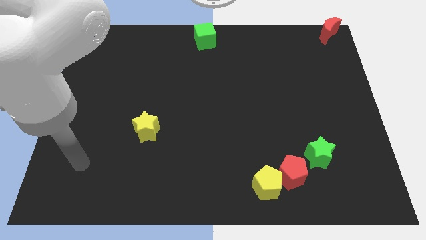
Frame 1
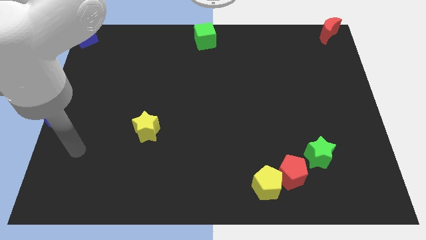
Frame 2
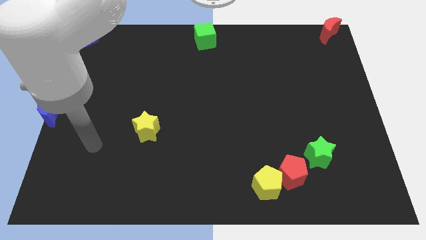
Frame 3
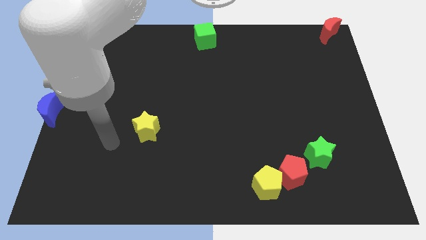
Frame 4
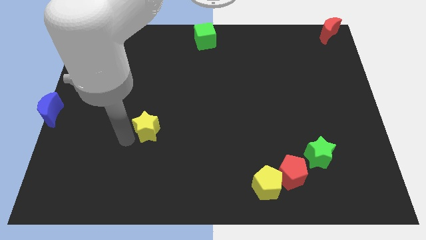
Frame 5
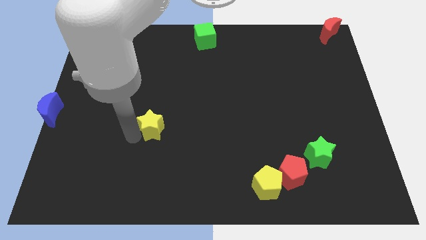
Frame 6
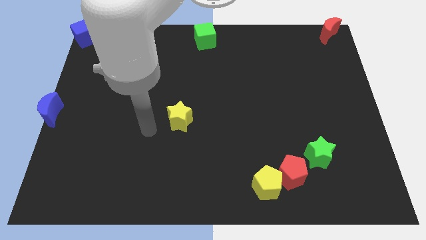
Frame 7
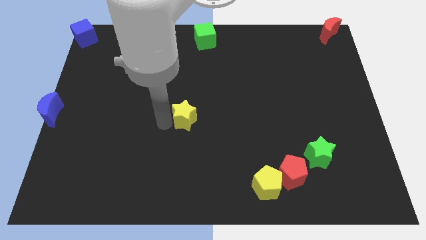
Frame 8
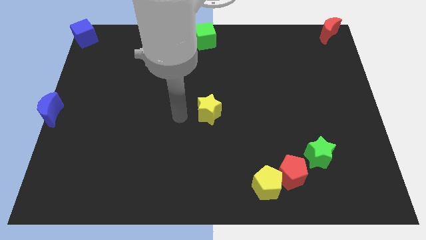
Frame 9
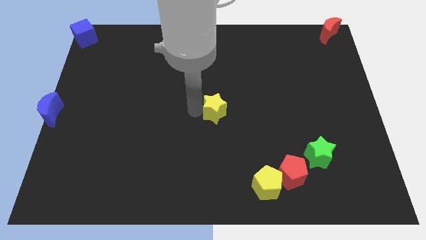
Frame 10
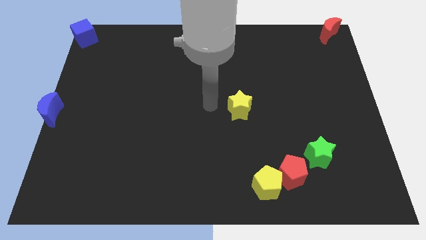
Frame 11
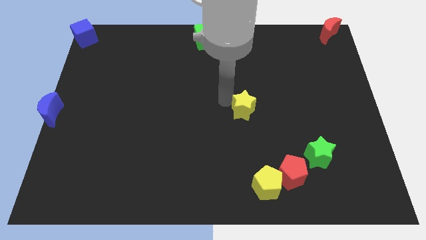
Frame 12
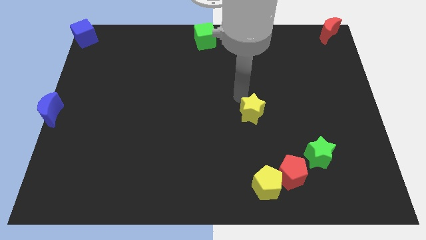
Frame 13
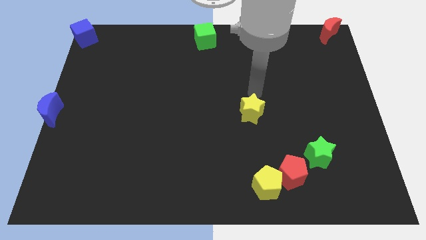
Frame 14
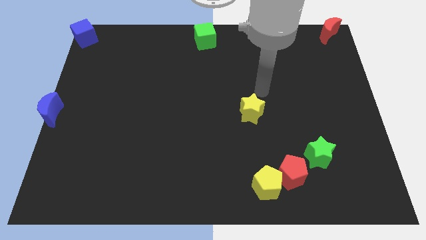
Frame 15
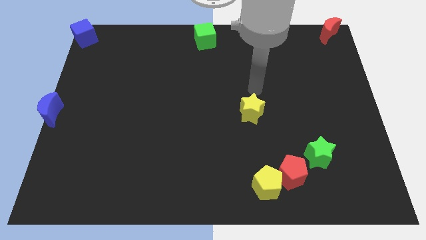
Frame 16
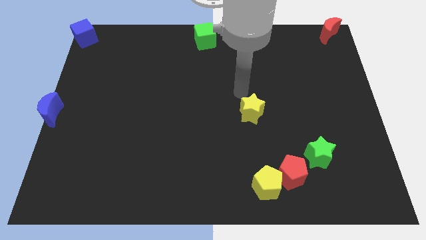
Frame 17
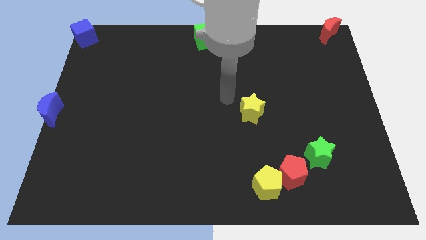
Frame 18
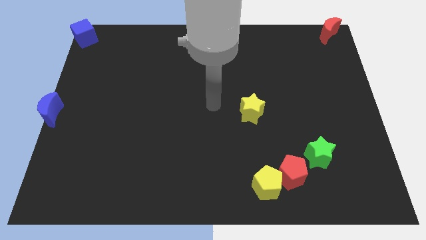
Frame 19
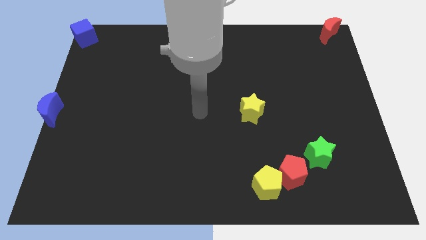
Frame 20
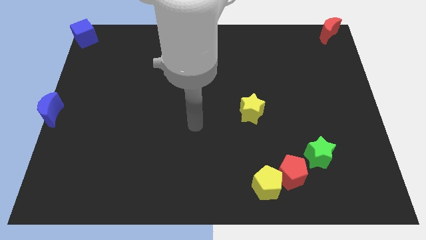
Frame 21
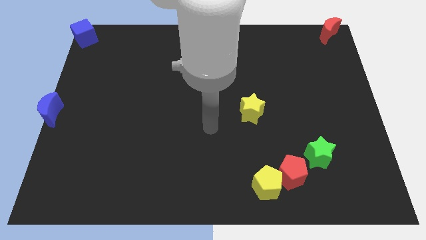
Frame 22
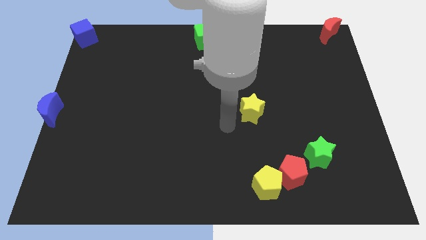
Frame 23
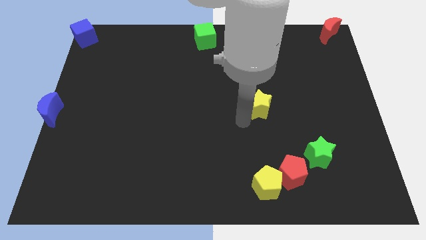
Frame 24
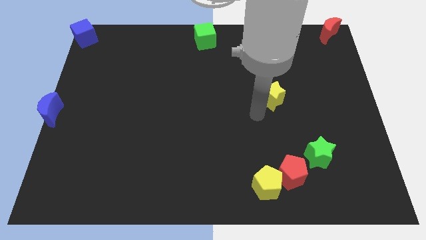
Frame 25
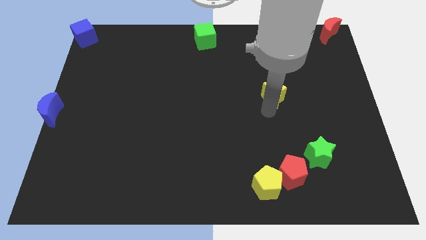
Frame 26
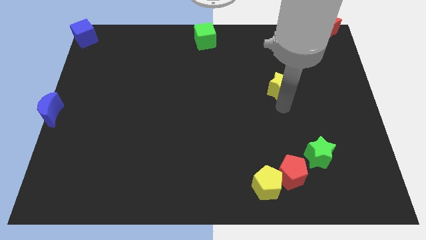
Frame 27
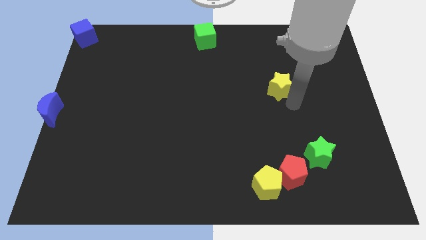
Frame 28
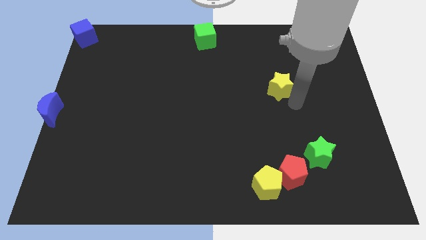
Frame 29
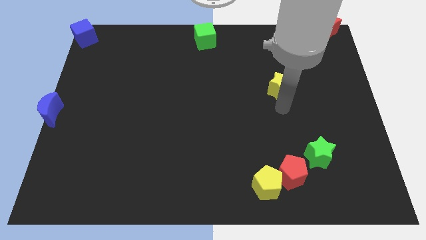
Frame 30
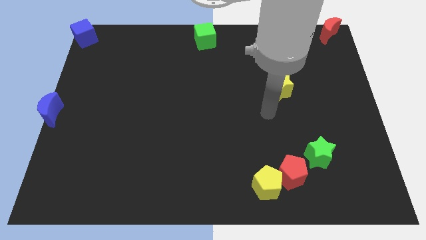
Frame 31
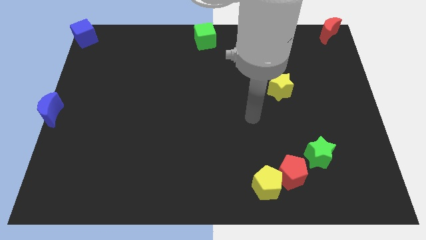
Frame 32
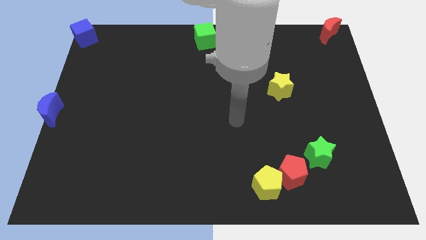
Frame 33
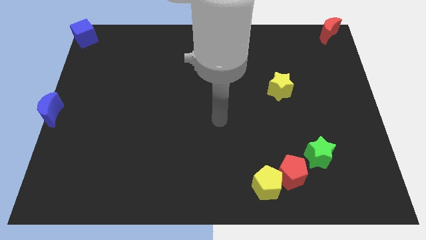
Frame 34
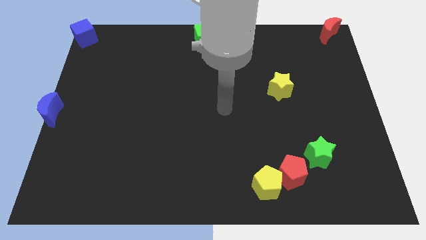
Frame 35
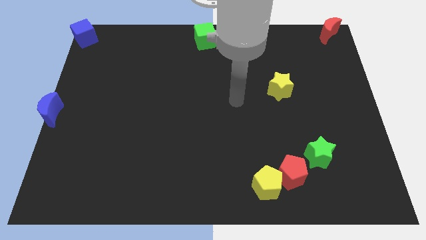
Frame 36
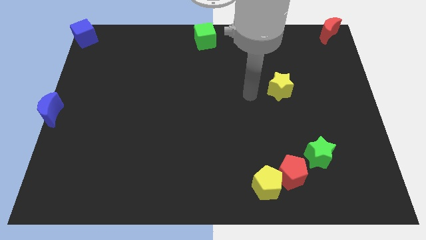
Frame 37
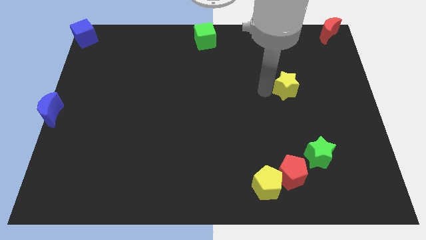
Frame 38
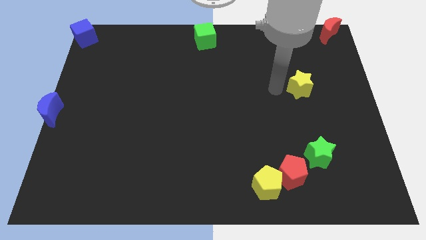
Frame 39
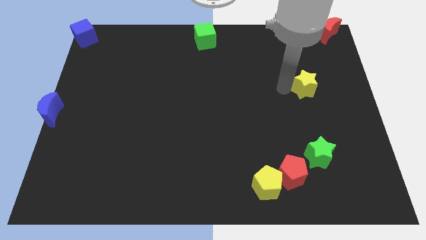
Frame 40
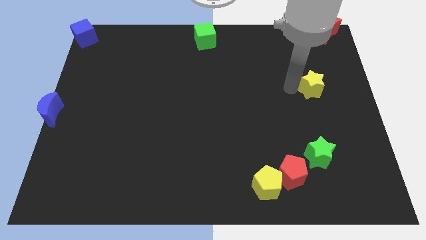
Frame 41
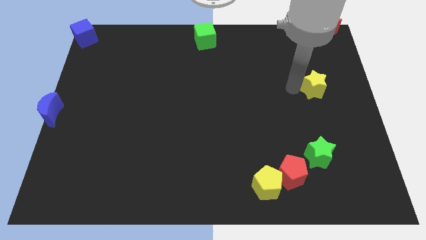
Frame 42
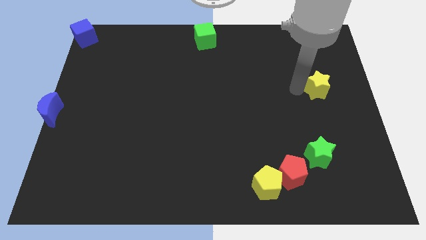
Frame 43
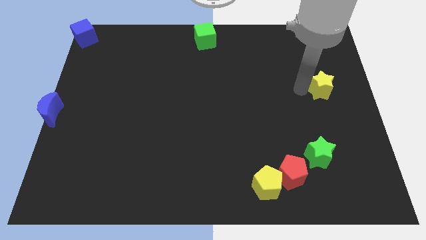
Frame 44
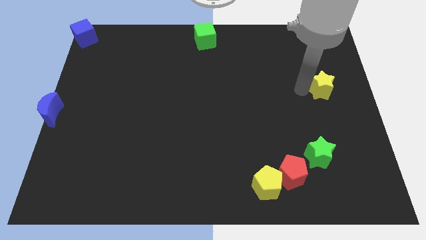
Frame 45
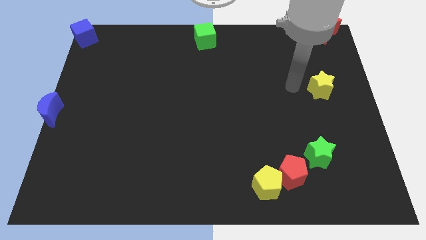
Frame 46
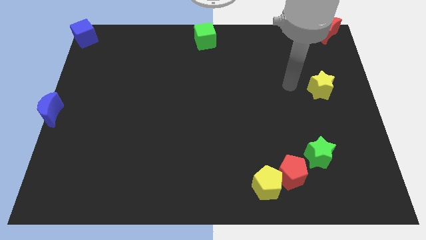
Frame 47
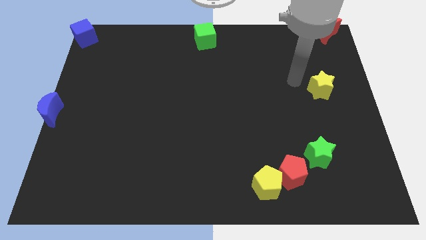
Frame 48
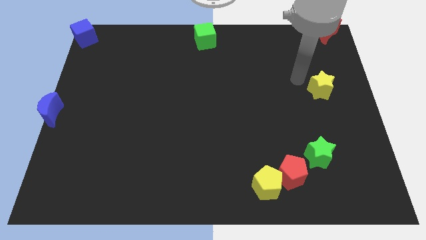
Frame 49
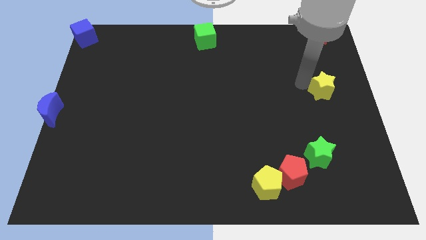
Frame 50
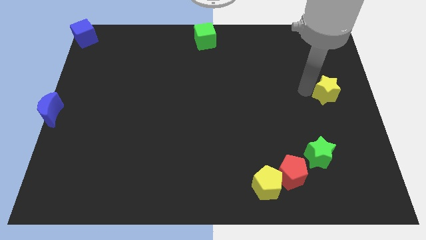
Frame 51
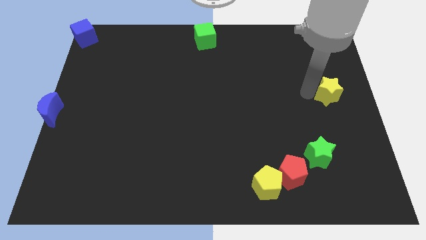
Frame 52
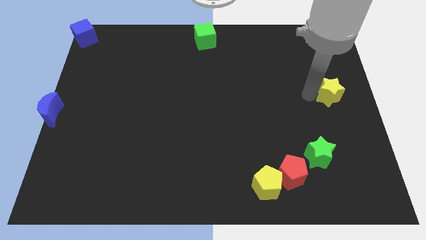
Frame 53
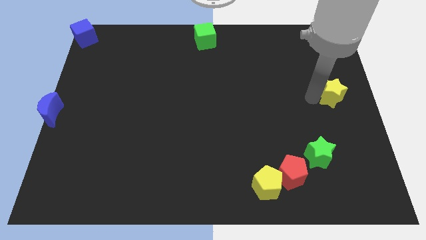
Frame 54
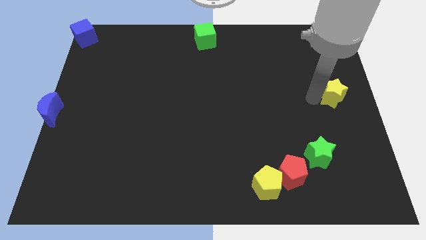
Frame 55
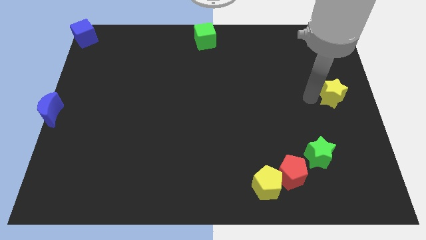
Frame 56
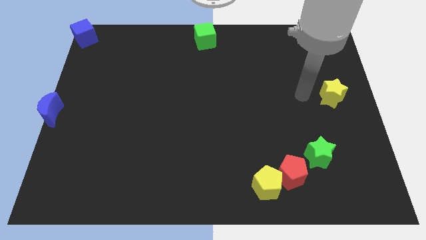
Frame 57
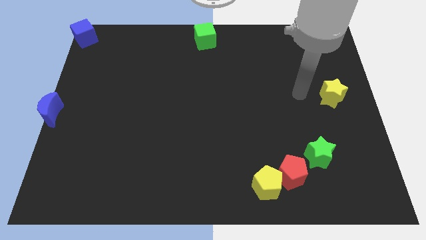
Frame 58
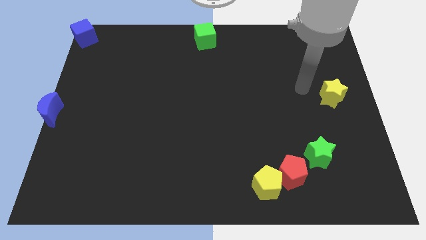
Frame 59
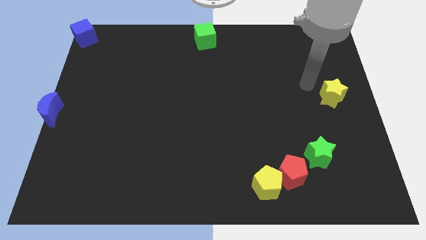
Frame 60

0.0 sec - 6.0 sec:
put the yellow star to the center right

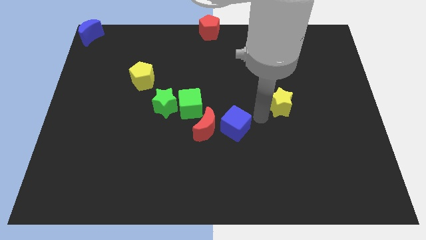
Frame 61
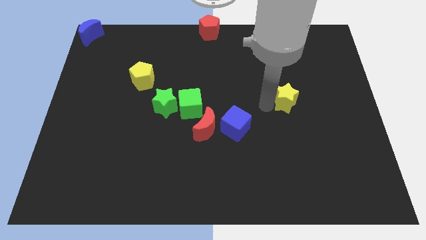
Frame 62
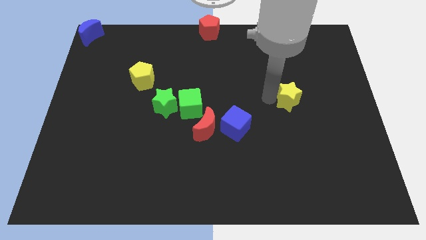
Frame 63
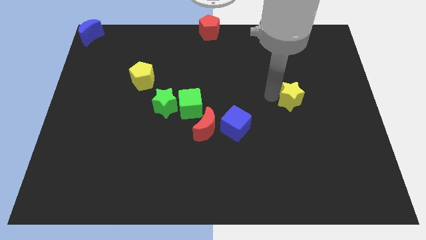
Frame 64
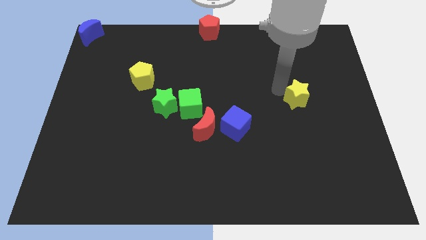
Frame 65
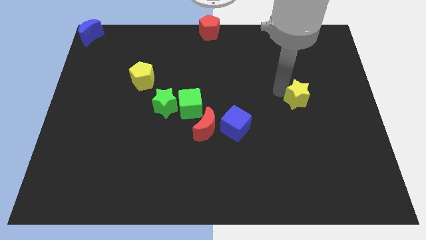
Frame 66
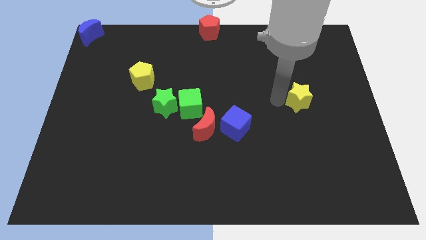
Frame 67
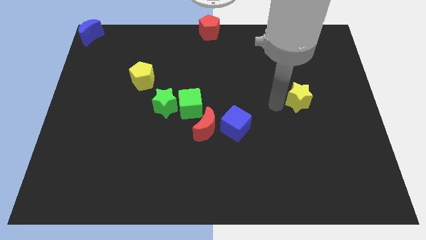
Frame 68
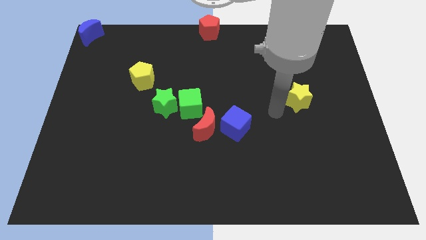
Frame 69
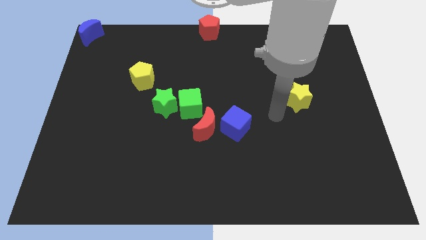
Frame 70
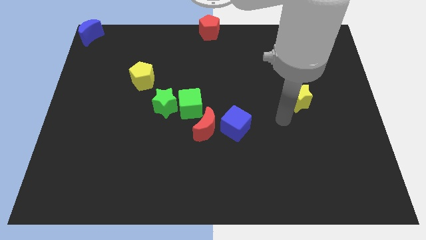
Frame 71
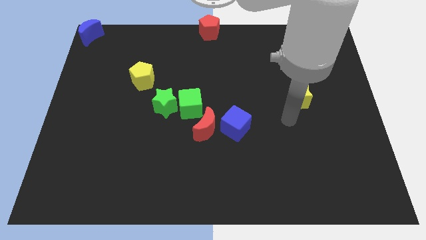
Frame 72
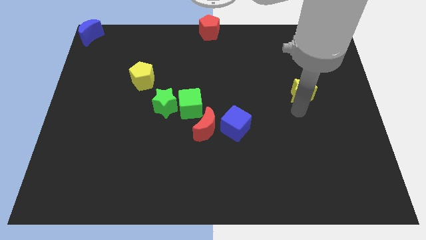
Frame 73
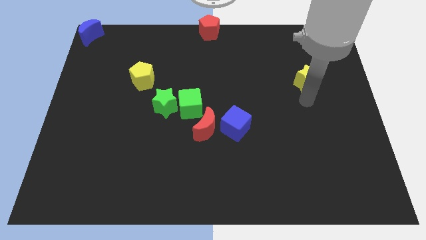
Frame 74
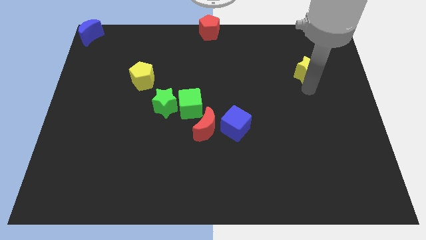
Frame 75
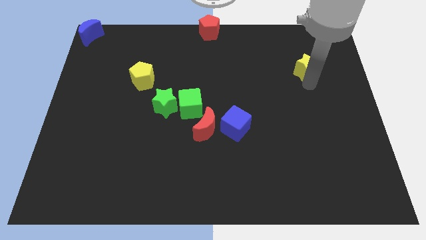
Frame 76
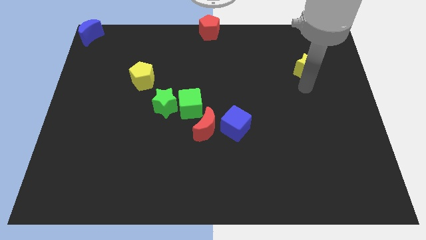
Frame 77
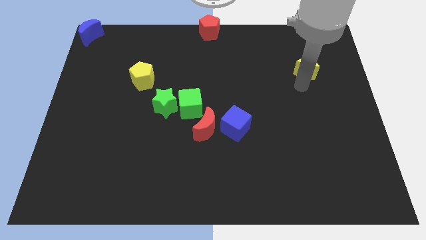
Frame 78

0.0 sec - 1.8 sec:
move the yellow star upwards

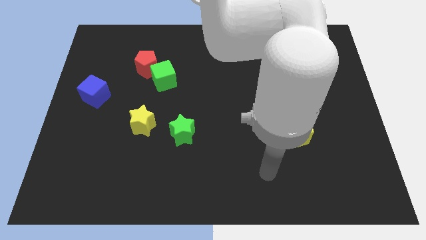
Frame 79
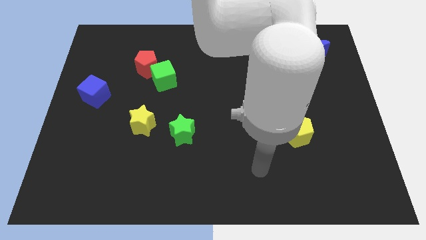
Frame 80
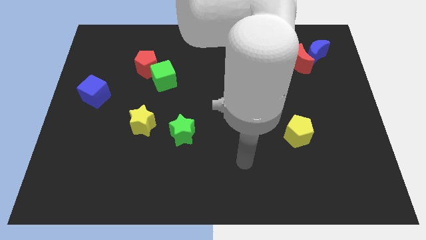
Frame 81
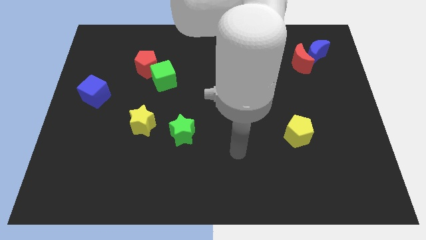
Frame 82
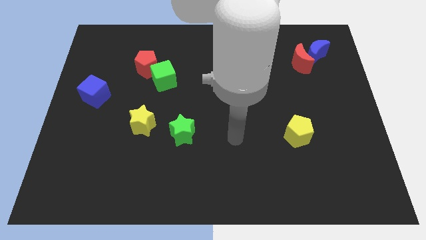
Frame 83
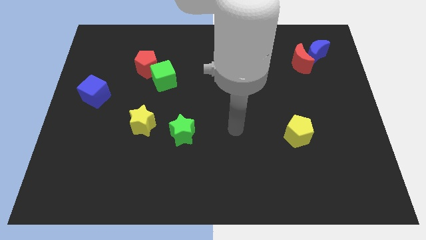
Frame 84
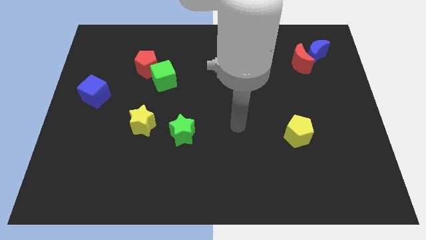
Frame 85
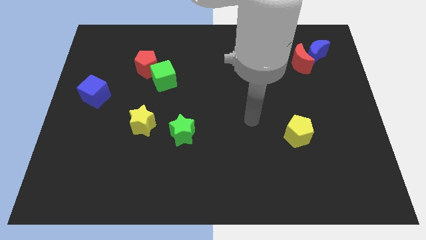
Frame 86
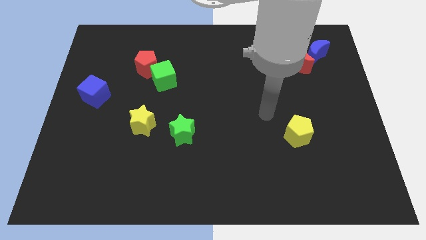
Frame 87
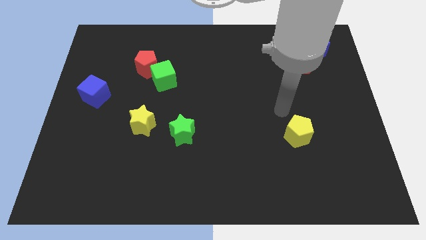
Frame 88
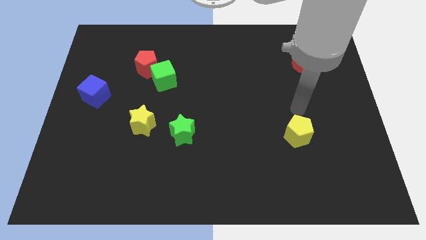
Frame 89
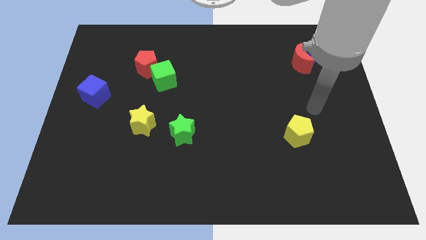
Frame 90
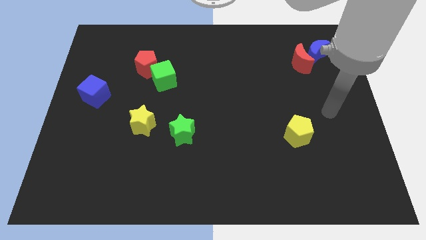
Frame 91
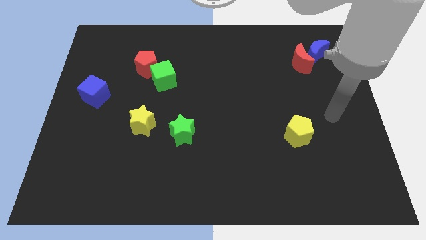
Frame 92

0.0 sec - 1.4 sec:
point your hand at the top right side of the yellow pentagon

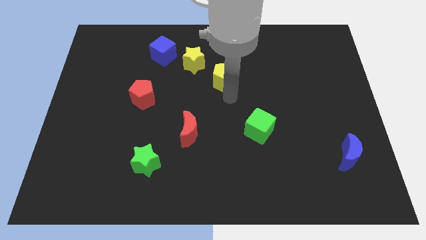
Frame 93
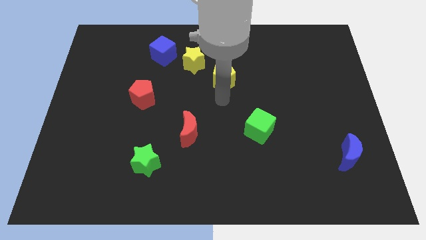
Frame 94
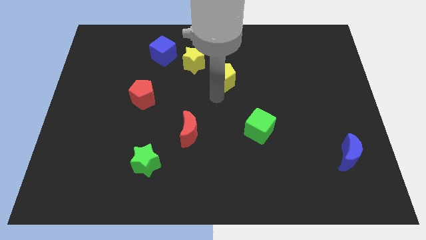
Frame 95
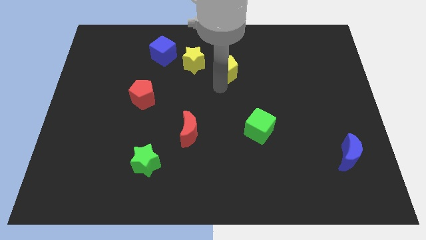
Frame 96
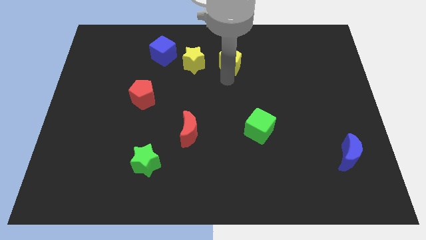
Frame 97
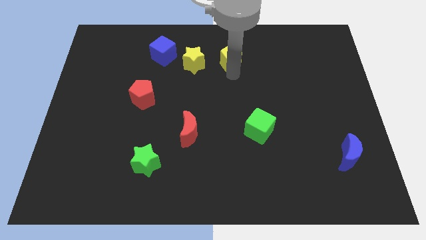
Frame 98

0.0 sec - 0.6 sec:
push yellow pentagon beside yellow star
